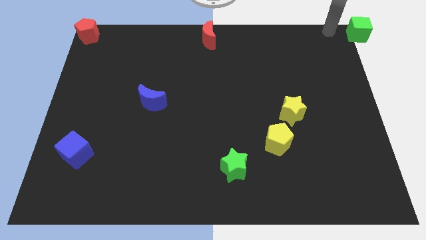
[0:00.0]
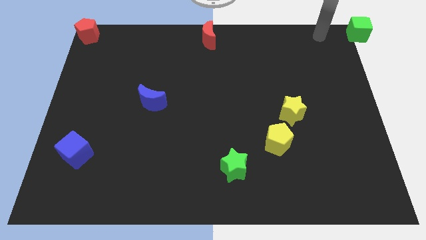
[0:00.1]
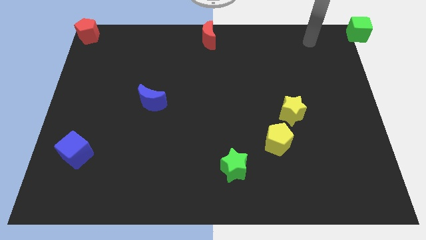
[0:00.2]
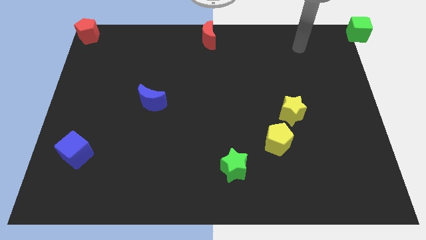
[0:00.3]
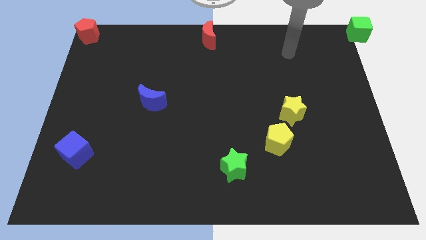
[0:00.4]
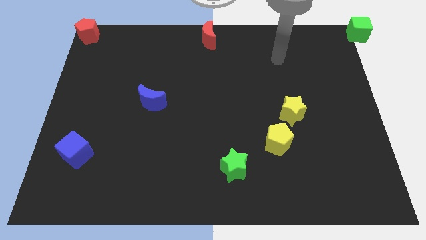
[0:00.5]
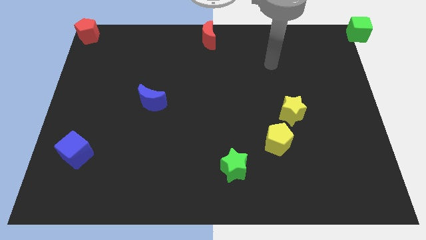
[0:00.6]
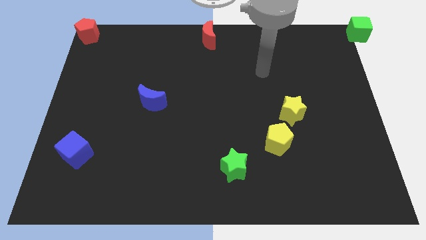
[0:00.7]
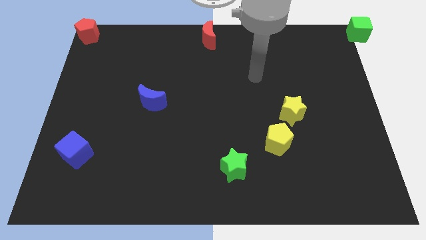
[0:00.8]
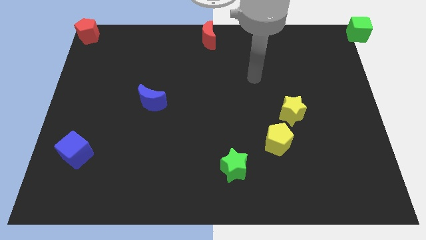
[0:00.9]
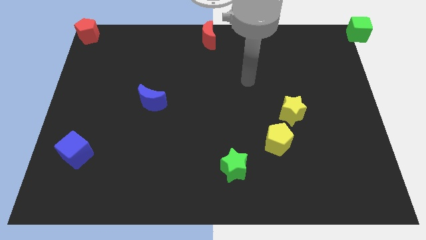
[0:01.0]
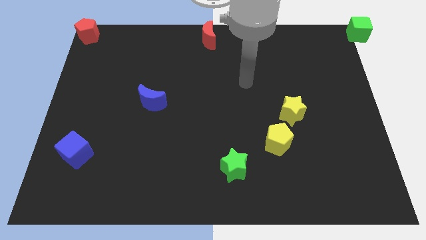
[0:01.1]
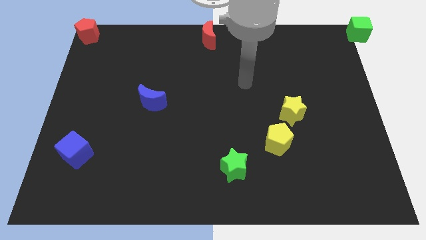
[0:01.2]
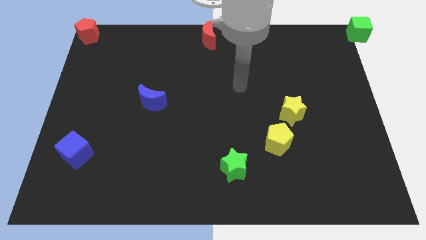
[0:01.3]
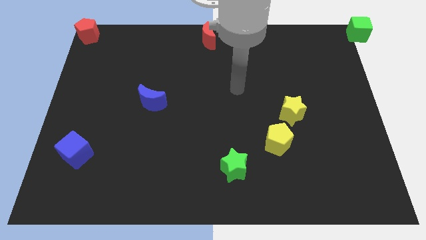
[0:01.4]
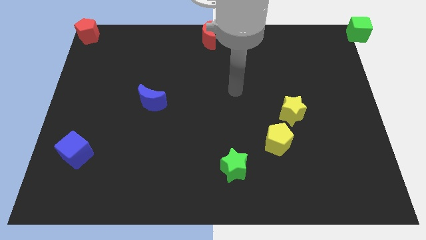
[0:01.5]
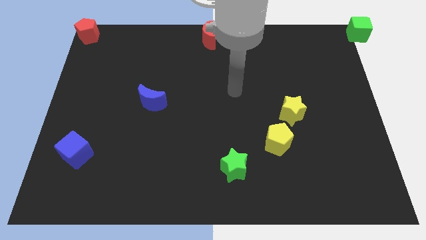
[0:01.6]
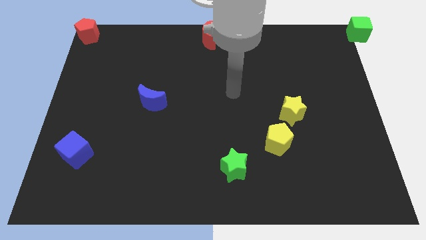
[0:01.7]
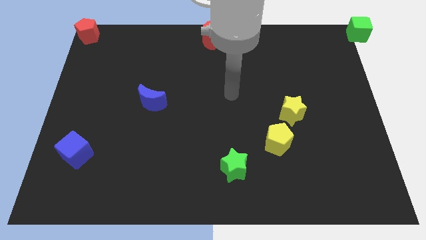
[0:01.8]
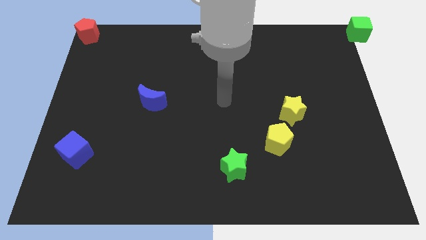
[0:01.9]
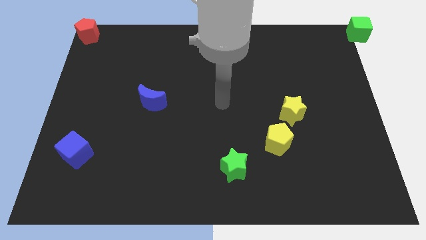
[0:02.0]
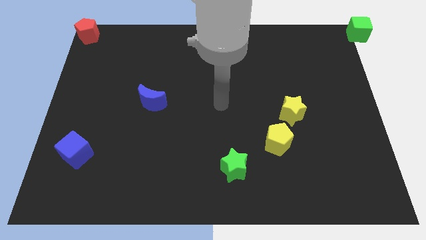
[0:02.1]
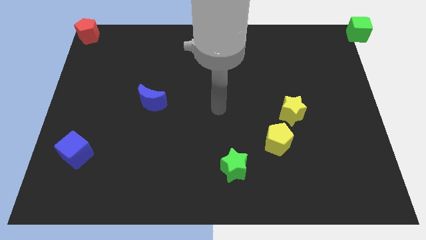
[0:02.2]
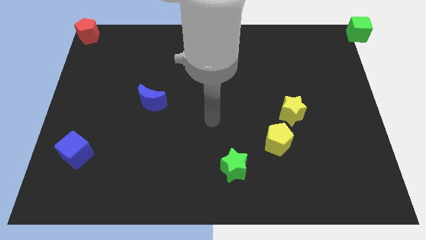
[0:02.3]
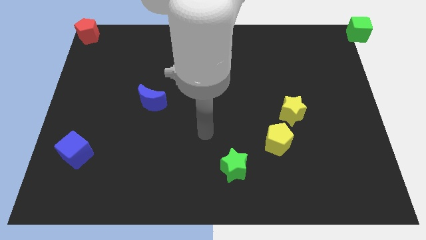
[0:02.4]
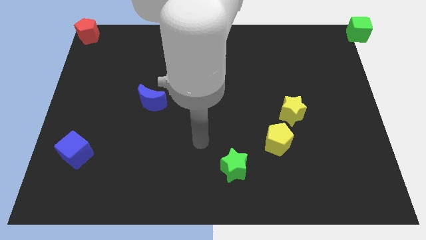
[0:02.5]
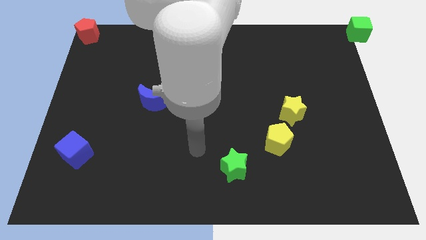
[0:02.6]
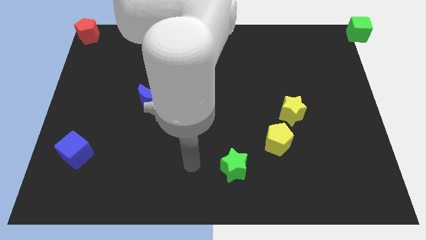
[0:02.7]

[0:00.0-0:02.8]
point your arm at the left of the green star

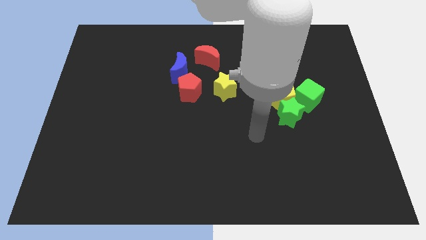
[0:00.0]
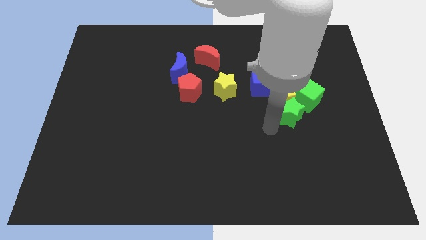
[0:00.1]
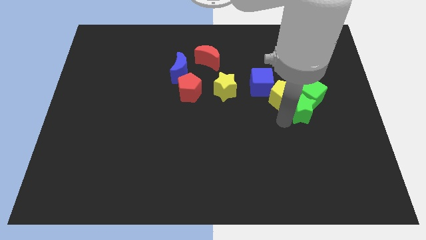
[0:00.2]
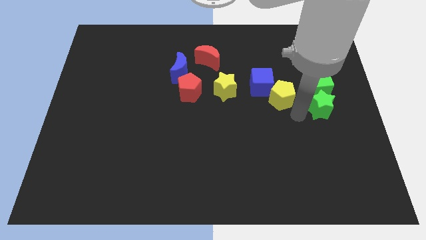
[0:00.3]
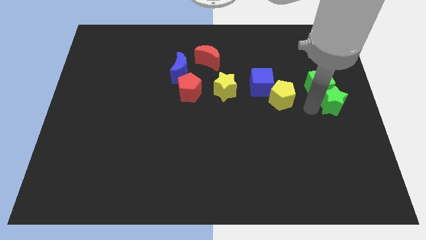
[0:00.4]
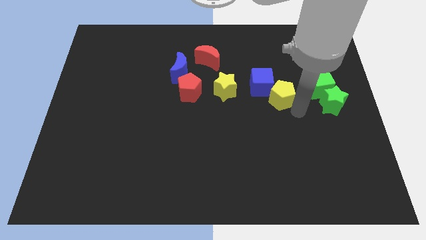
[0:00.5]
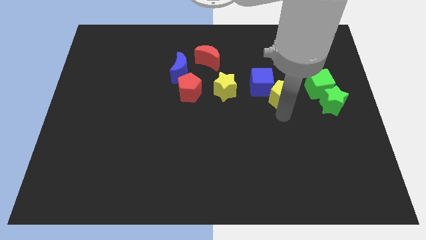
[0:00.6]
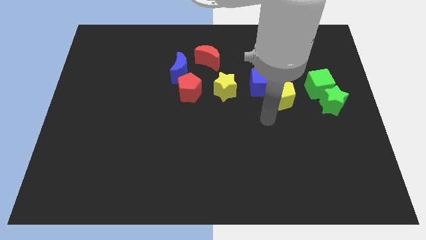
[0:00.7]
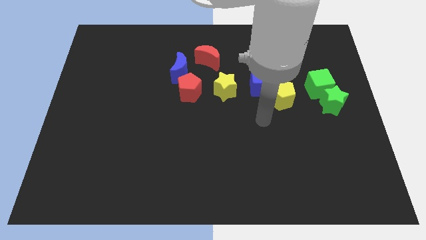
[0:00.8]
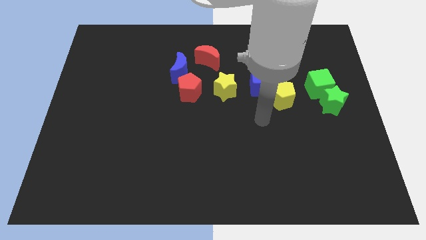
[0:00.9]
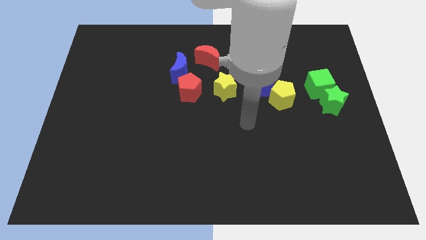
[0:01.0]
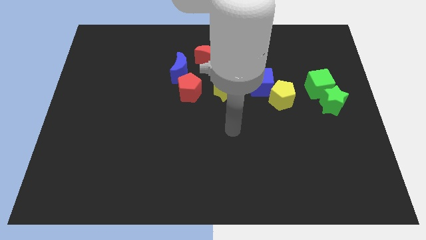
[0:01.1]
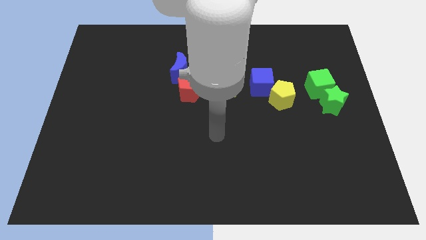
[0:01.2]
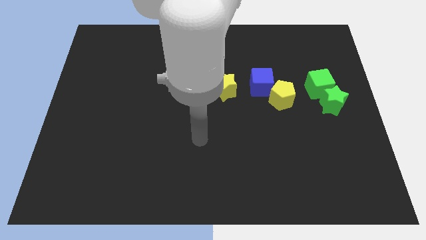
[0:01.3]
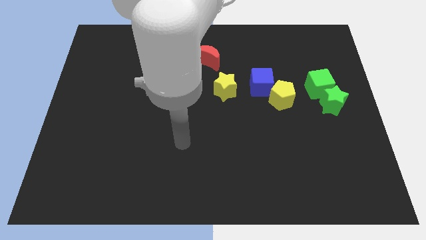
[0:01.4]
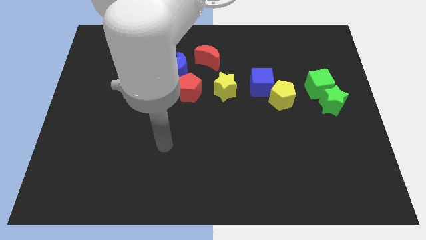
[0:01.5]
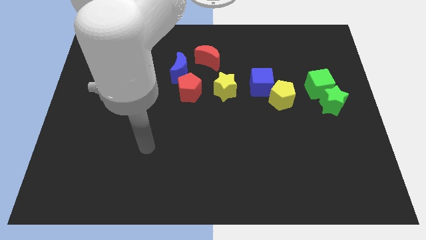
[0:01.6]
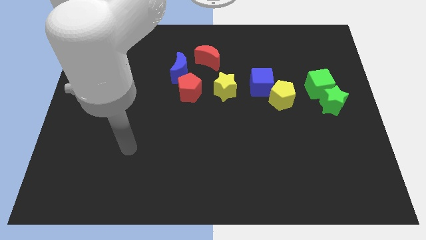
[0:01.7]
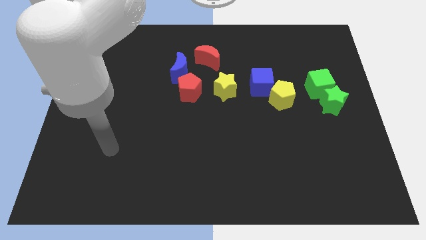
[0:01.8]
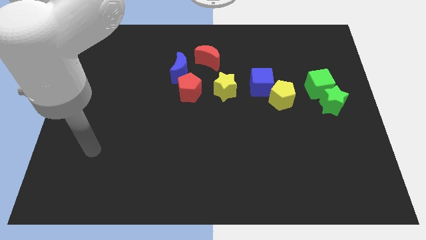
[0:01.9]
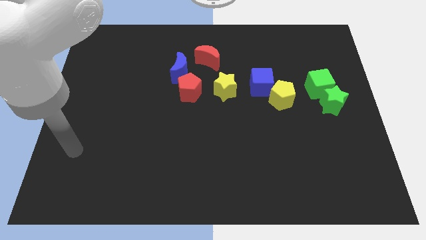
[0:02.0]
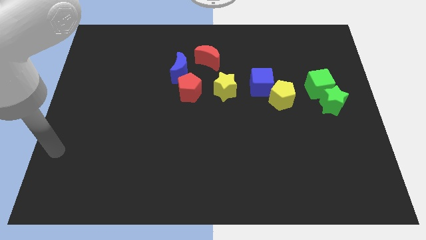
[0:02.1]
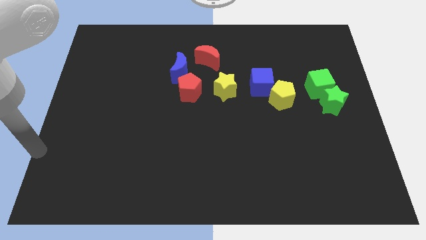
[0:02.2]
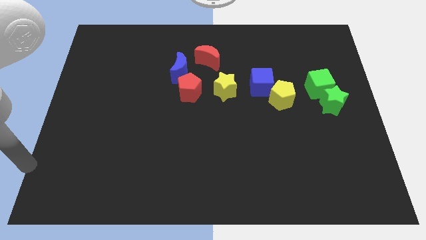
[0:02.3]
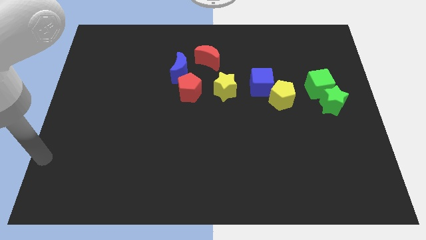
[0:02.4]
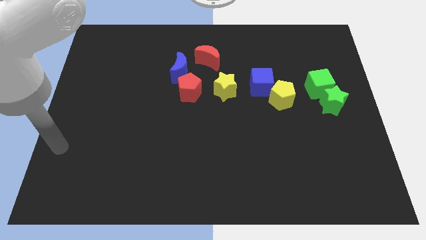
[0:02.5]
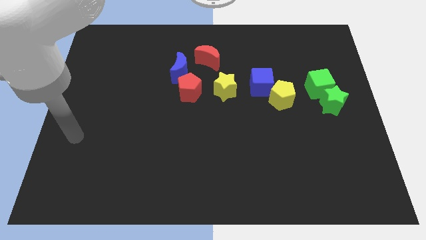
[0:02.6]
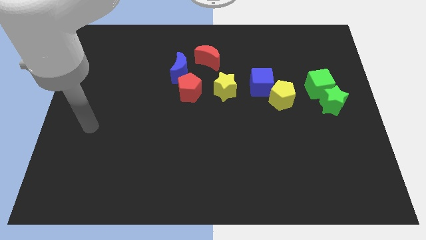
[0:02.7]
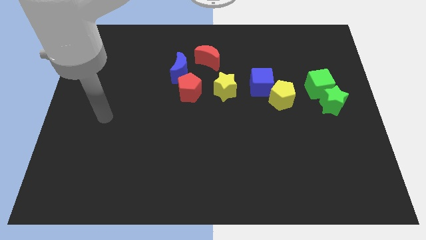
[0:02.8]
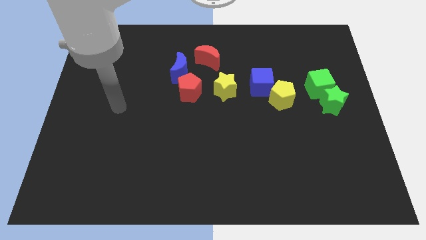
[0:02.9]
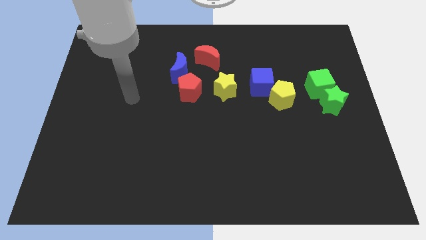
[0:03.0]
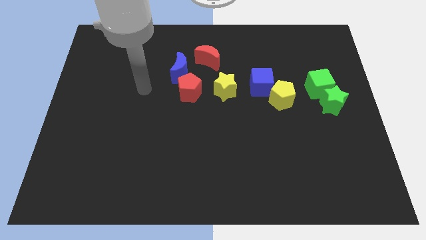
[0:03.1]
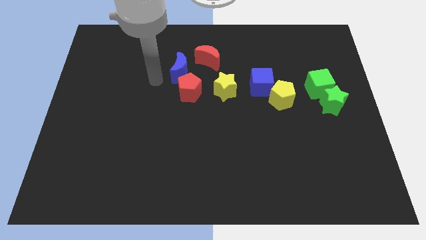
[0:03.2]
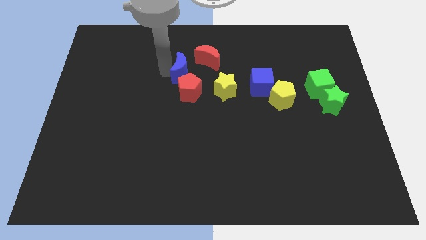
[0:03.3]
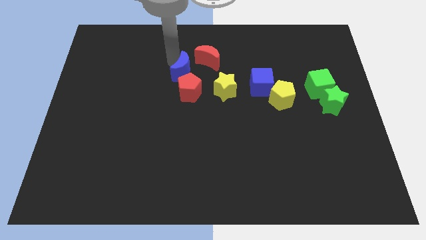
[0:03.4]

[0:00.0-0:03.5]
place the arm to the left of the blue moon

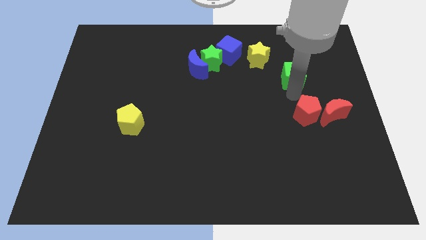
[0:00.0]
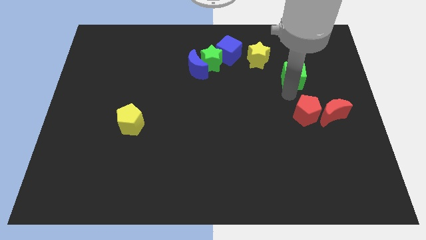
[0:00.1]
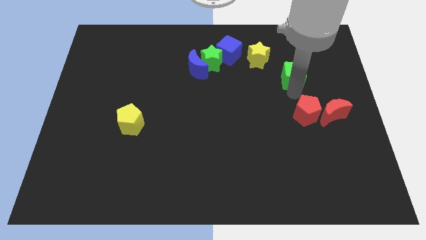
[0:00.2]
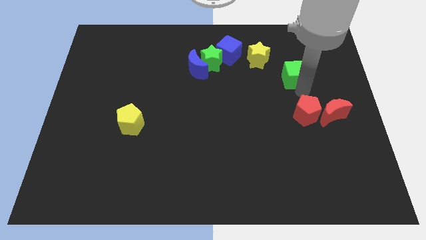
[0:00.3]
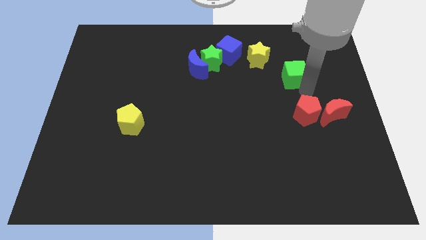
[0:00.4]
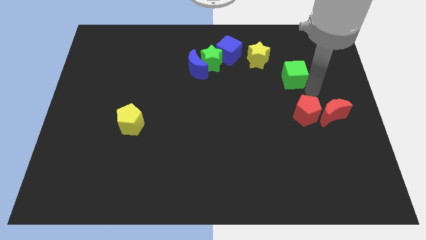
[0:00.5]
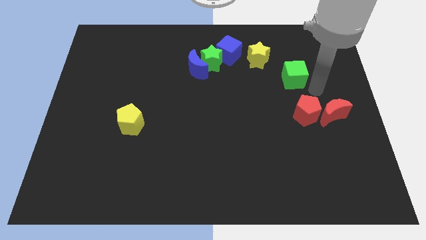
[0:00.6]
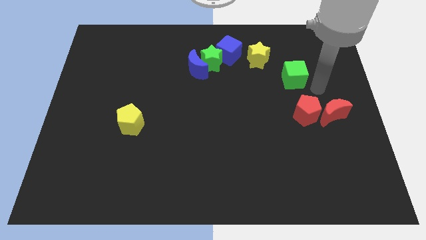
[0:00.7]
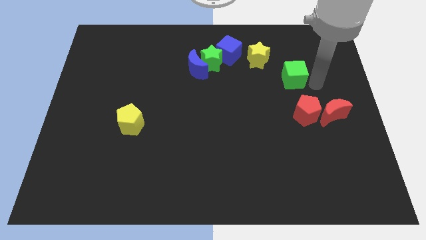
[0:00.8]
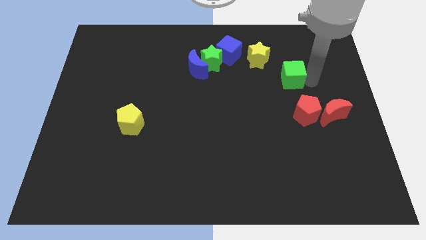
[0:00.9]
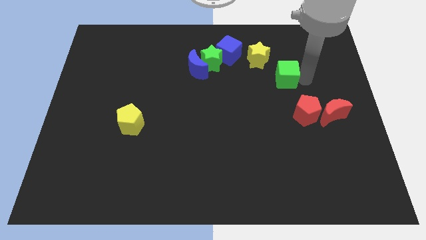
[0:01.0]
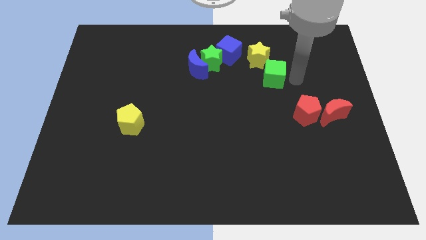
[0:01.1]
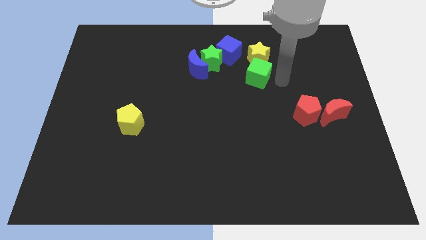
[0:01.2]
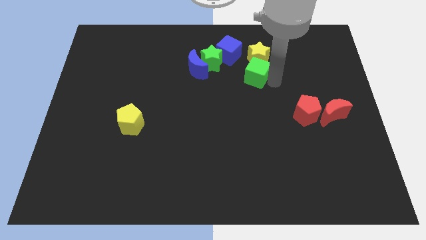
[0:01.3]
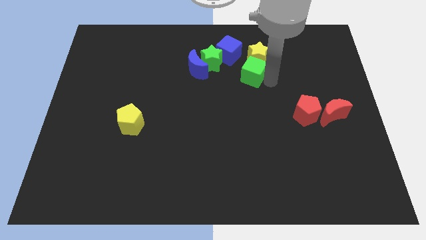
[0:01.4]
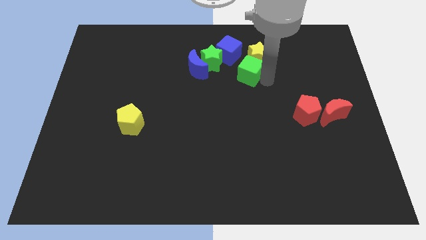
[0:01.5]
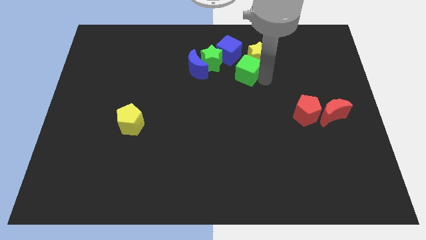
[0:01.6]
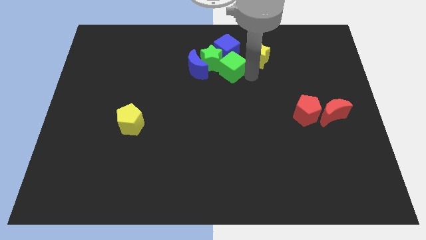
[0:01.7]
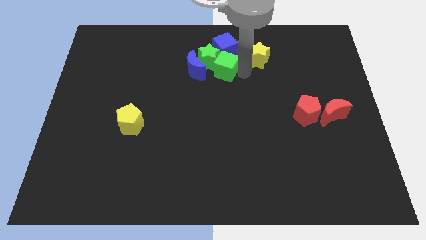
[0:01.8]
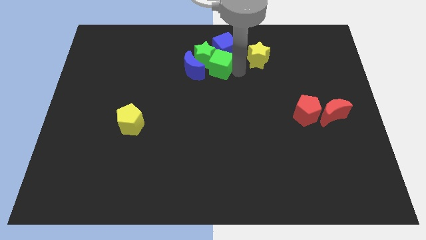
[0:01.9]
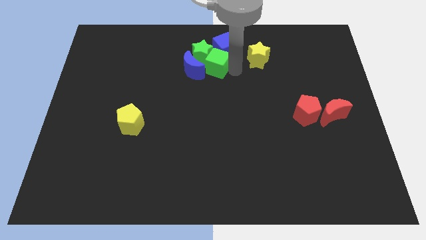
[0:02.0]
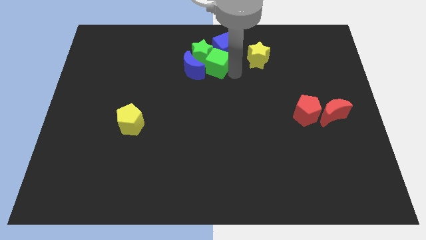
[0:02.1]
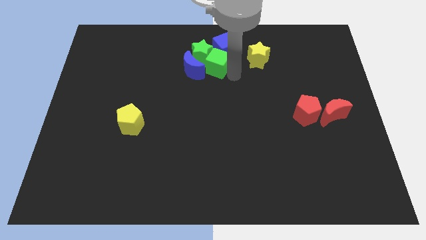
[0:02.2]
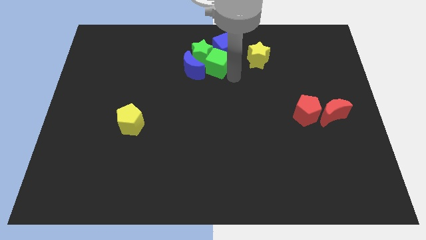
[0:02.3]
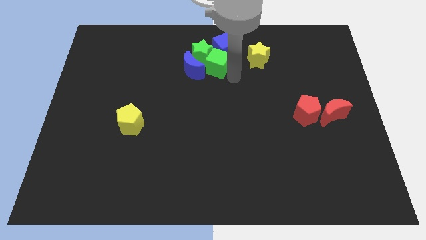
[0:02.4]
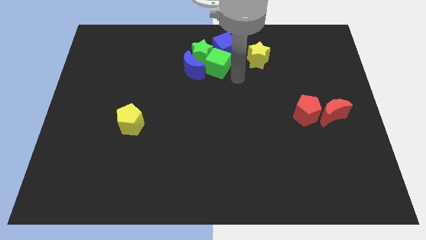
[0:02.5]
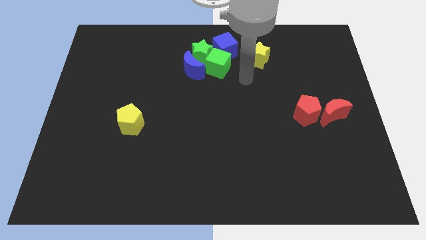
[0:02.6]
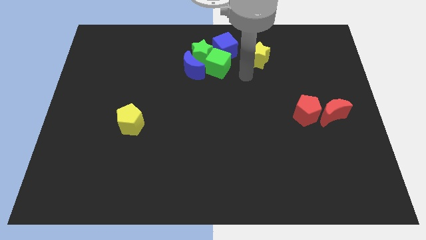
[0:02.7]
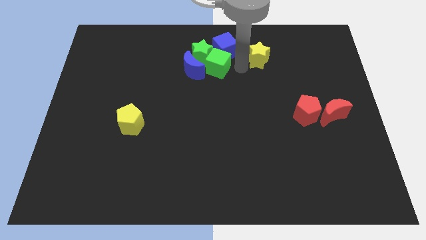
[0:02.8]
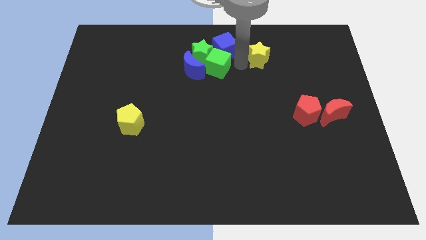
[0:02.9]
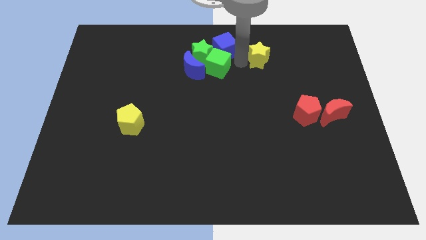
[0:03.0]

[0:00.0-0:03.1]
push the green cube into the group of blocks
